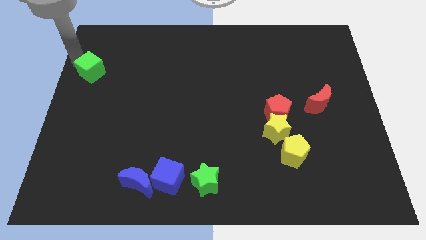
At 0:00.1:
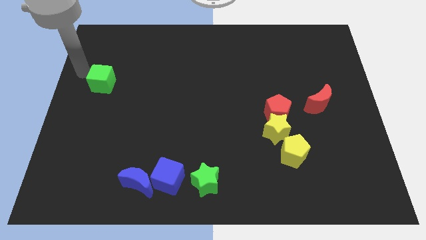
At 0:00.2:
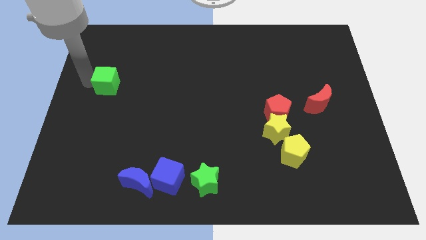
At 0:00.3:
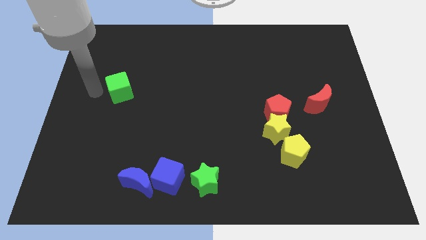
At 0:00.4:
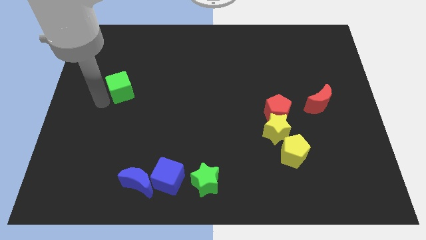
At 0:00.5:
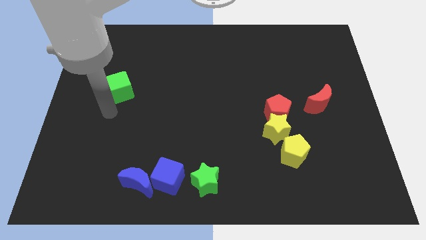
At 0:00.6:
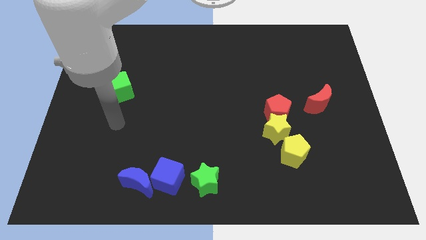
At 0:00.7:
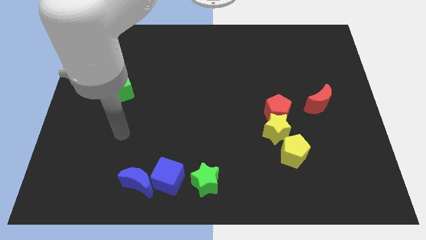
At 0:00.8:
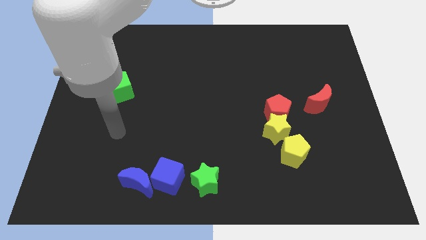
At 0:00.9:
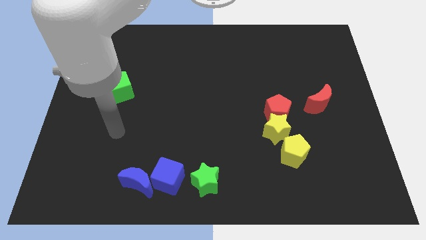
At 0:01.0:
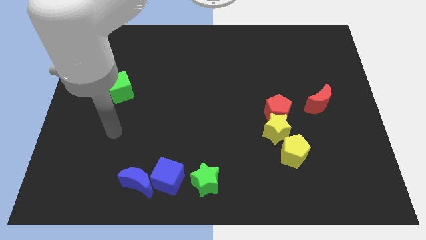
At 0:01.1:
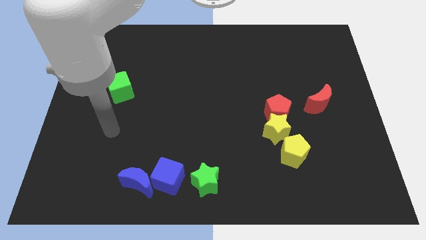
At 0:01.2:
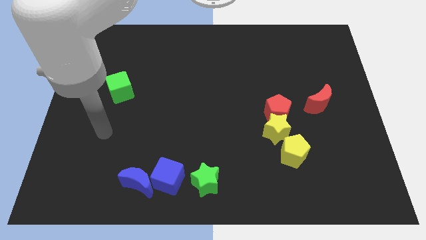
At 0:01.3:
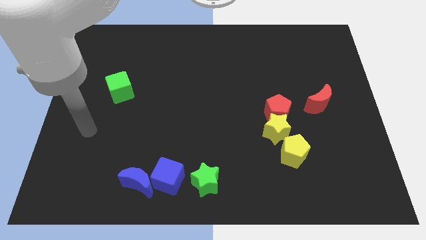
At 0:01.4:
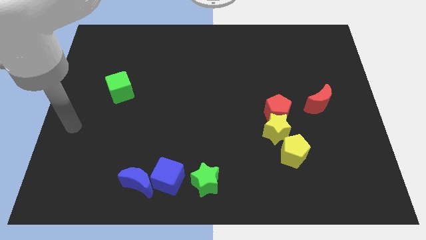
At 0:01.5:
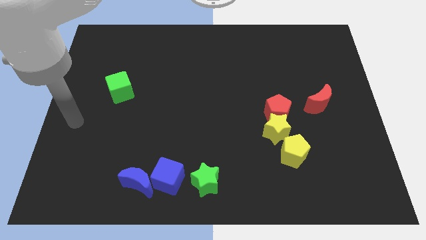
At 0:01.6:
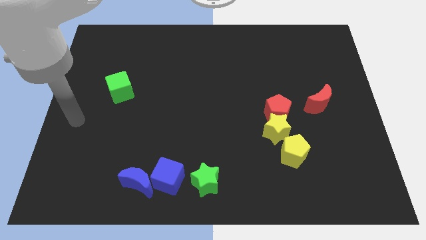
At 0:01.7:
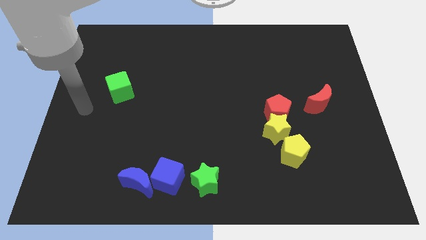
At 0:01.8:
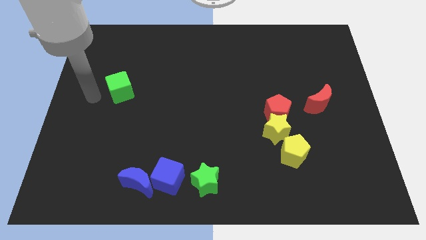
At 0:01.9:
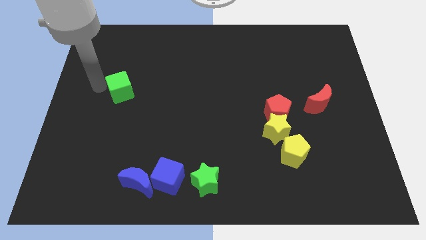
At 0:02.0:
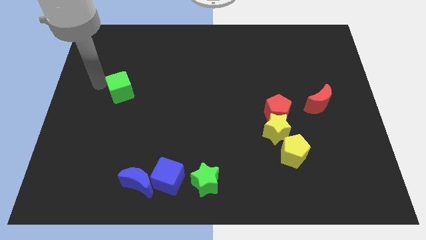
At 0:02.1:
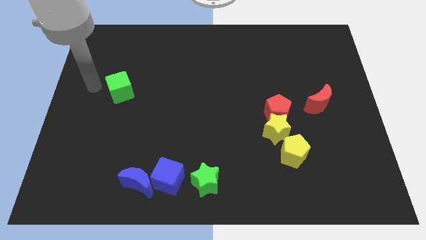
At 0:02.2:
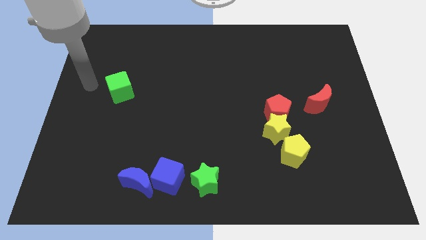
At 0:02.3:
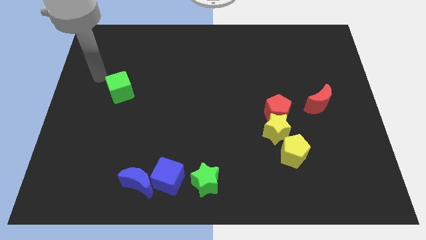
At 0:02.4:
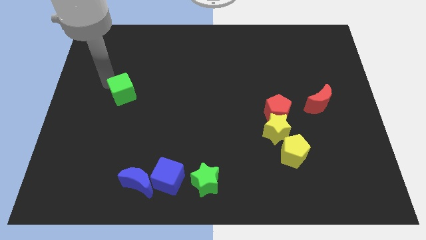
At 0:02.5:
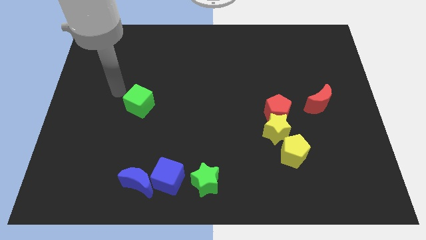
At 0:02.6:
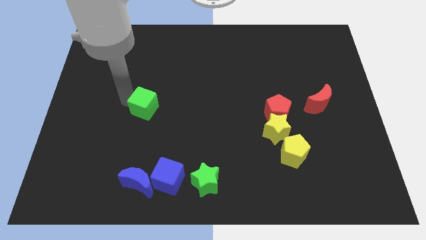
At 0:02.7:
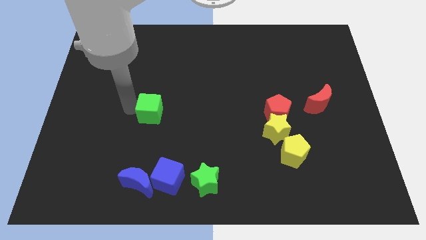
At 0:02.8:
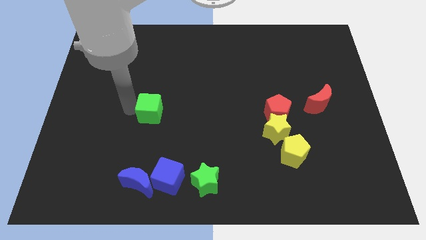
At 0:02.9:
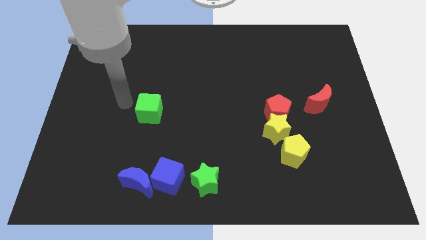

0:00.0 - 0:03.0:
push the green cube towards the center of the board

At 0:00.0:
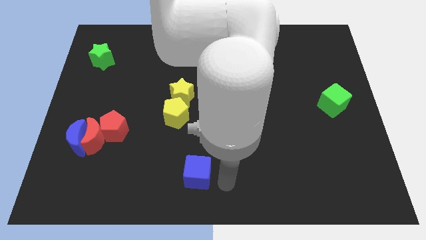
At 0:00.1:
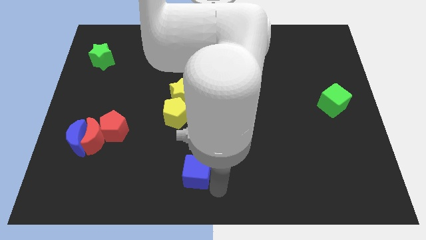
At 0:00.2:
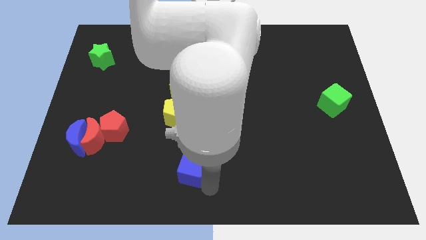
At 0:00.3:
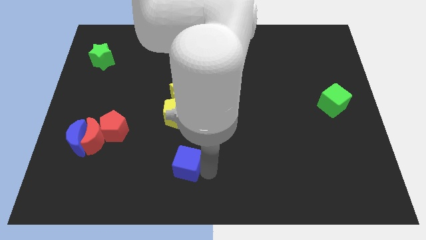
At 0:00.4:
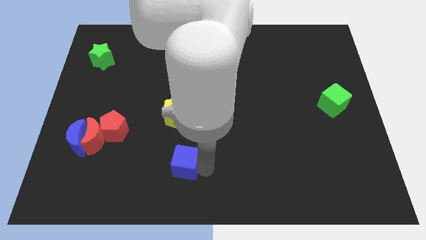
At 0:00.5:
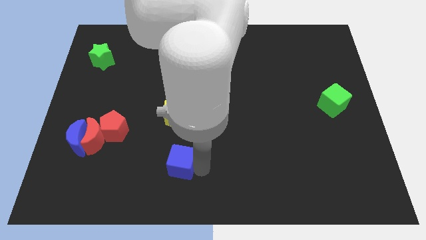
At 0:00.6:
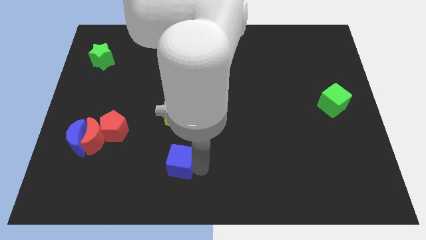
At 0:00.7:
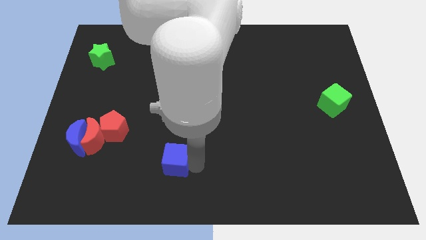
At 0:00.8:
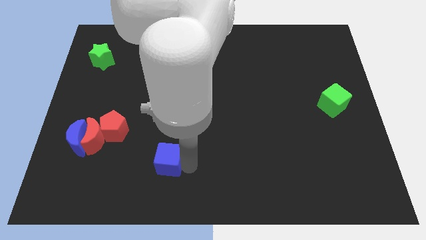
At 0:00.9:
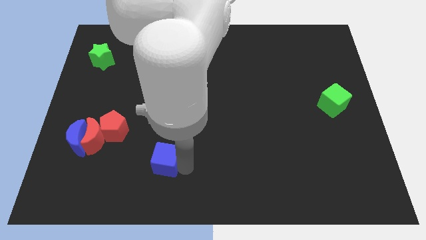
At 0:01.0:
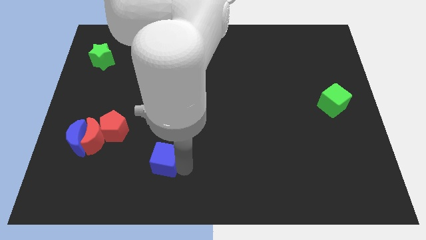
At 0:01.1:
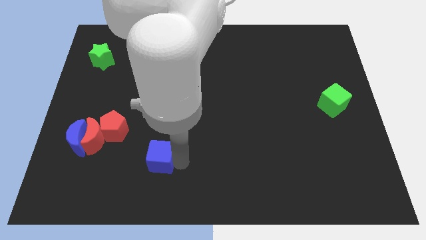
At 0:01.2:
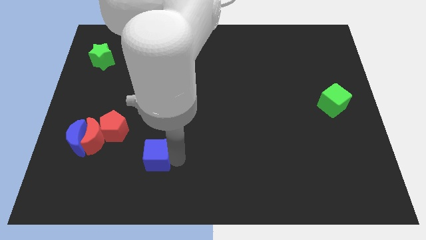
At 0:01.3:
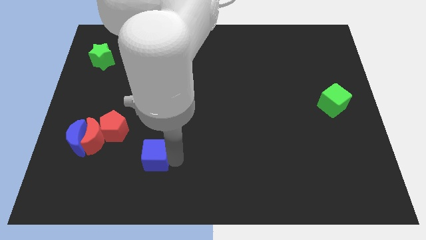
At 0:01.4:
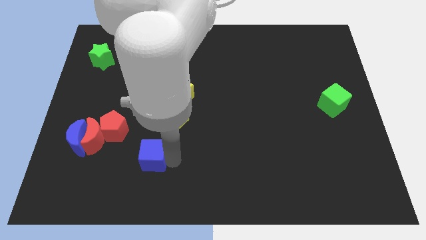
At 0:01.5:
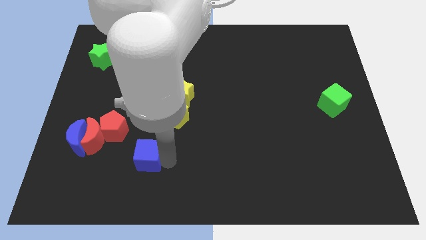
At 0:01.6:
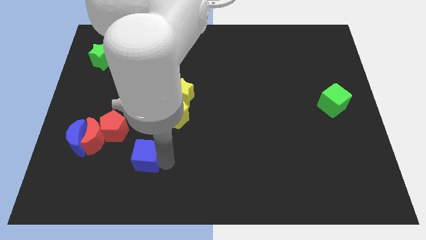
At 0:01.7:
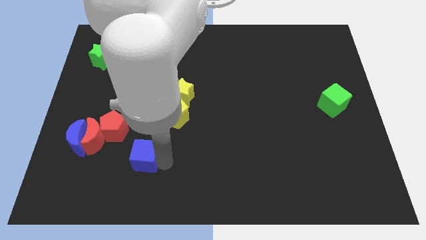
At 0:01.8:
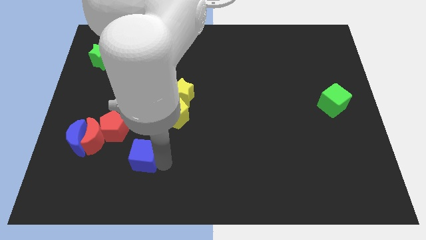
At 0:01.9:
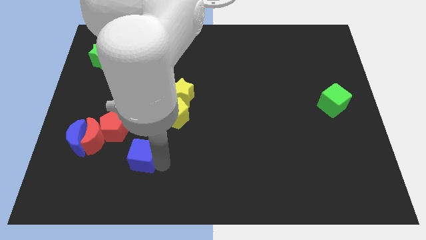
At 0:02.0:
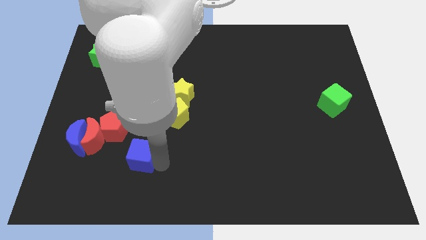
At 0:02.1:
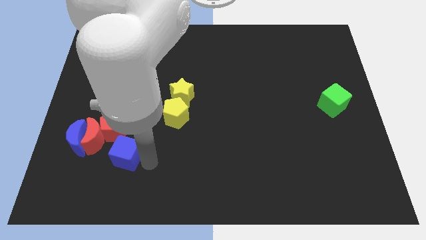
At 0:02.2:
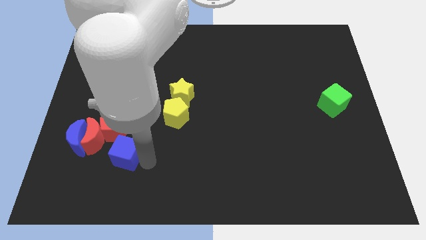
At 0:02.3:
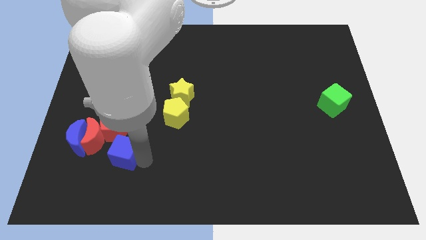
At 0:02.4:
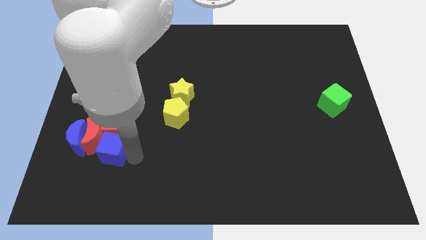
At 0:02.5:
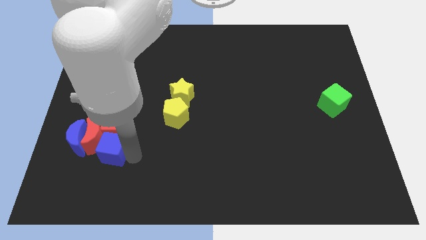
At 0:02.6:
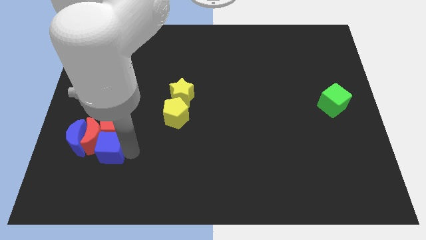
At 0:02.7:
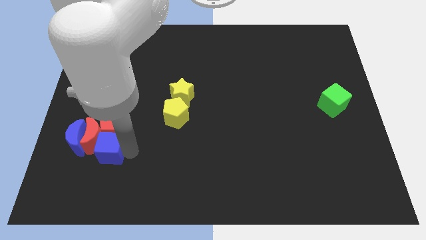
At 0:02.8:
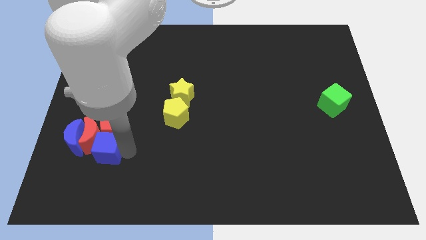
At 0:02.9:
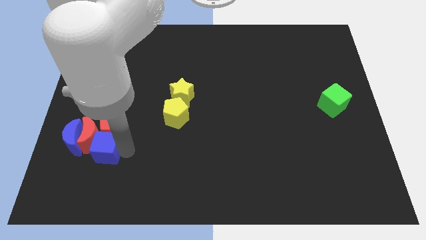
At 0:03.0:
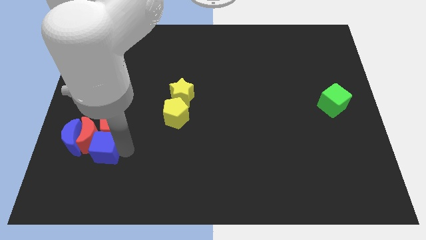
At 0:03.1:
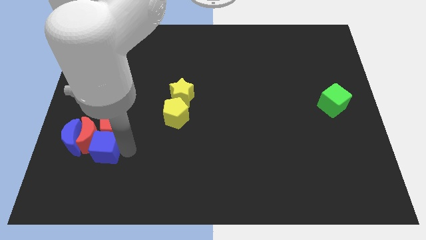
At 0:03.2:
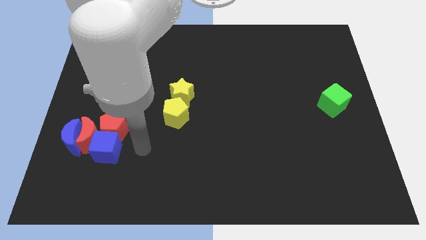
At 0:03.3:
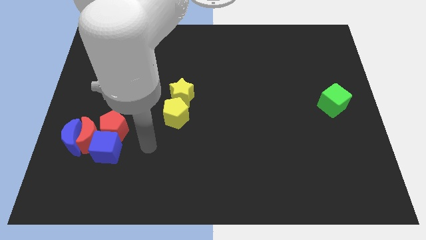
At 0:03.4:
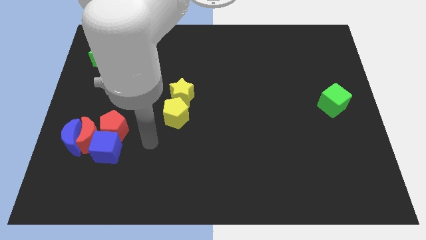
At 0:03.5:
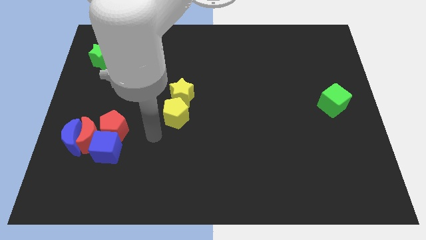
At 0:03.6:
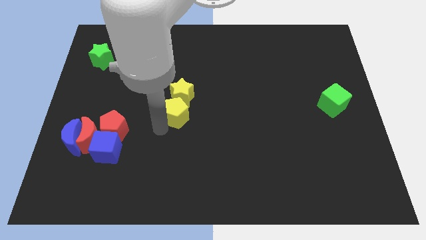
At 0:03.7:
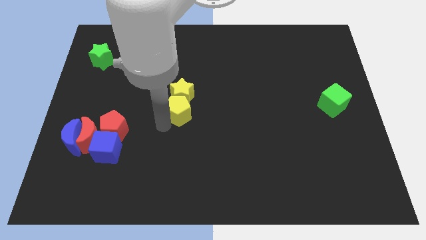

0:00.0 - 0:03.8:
push the blue cube into the red crescent

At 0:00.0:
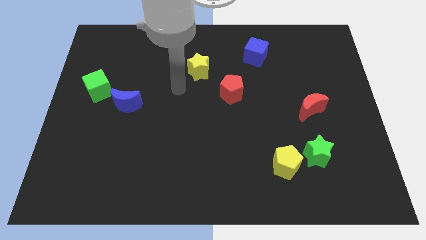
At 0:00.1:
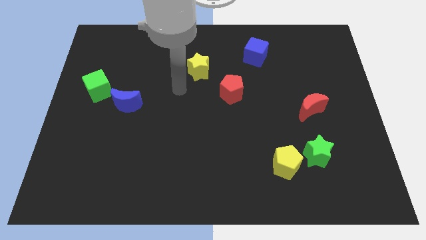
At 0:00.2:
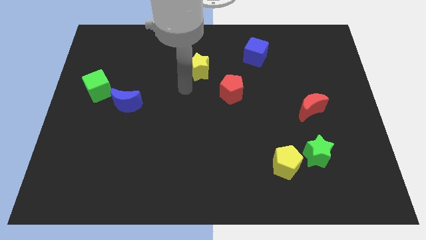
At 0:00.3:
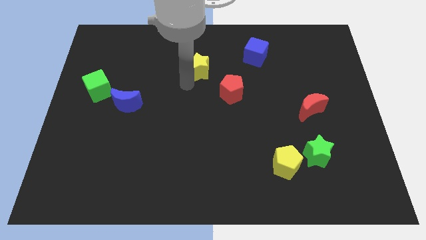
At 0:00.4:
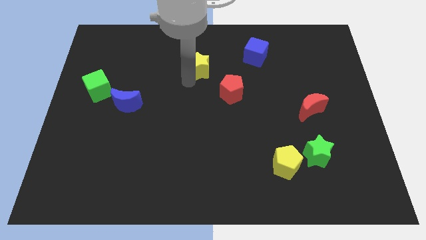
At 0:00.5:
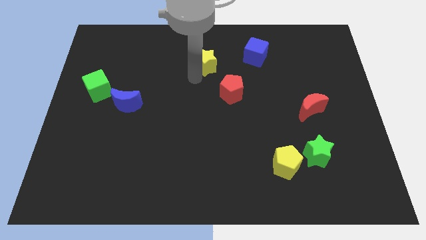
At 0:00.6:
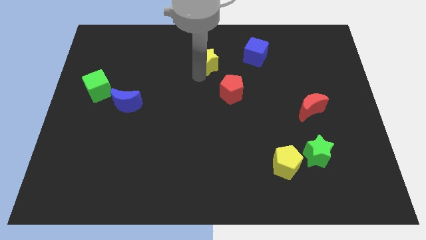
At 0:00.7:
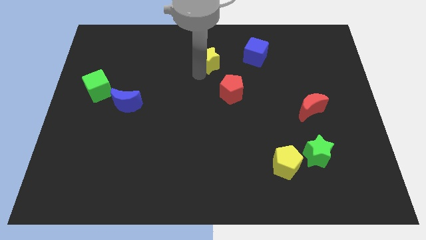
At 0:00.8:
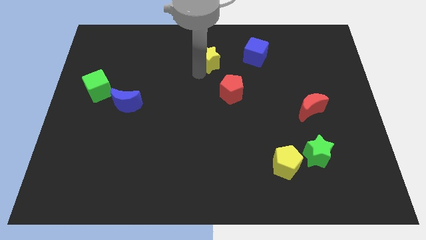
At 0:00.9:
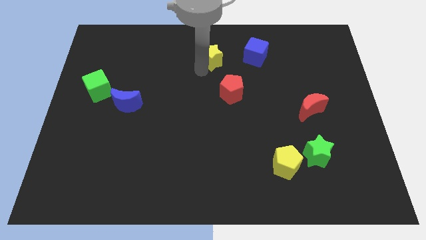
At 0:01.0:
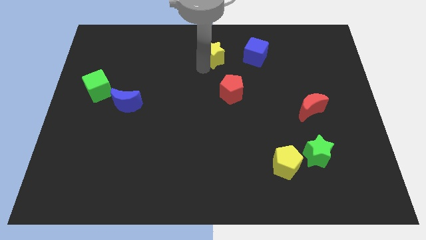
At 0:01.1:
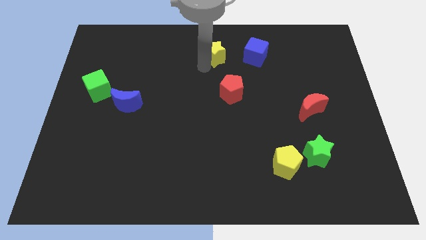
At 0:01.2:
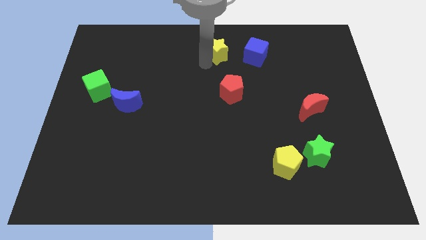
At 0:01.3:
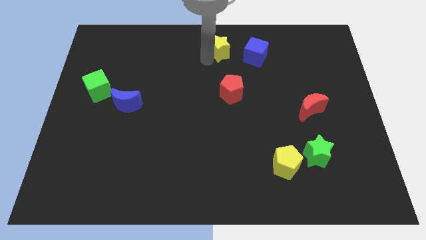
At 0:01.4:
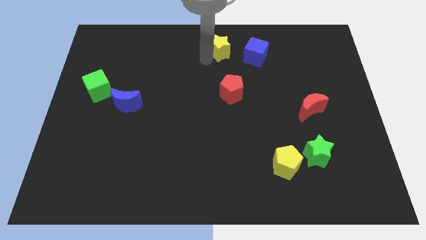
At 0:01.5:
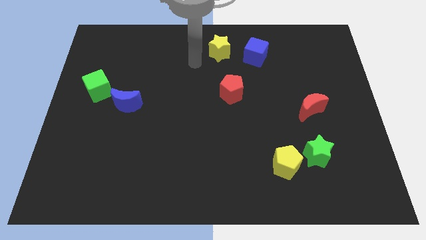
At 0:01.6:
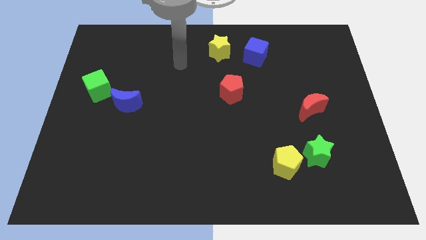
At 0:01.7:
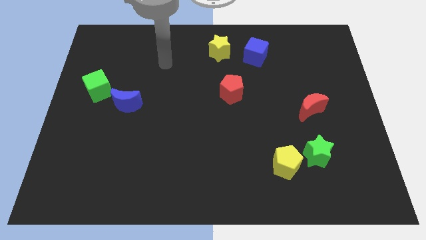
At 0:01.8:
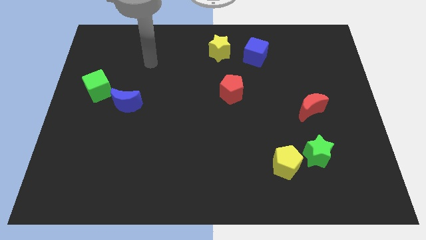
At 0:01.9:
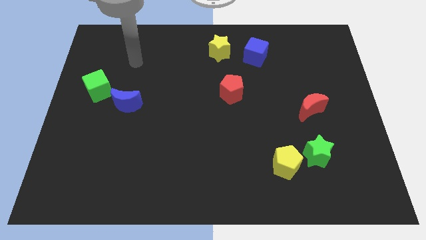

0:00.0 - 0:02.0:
place yellow star with red pentagon and blue cube so that they form a triangle
